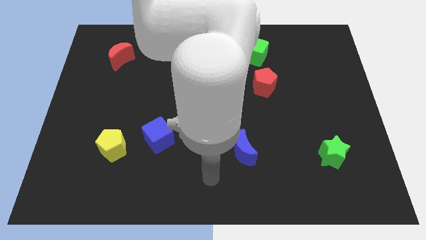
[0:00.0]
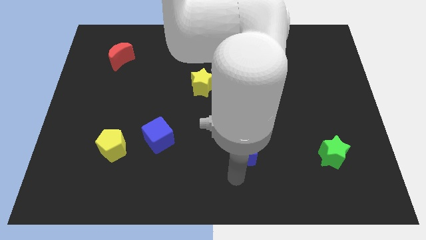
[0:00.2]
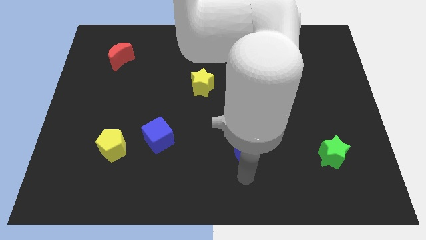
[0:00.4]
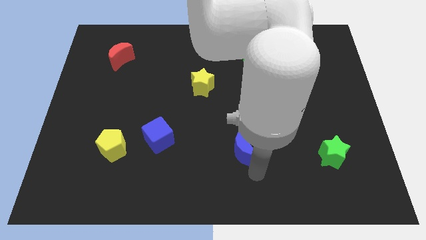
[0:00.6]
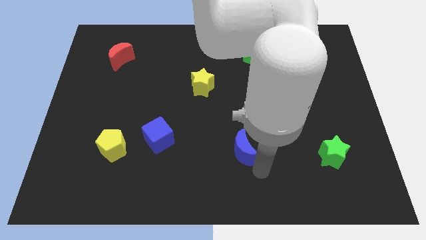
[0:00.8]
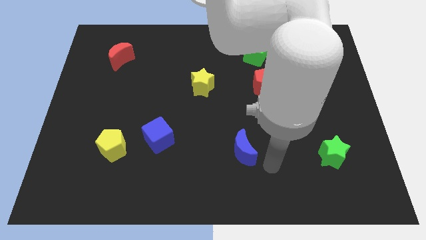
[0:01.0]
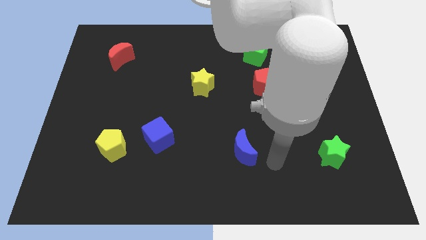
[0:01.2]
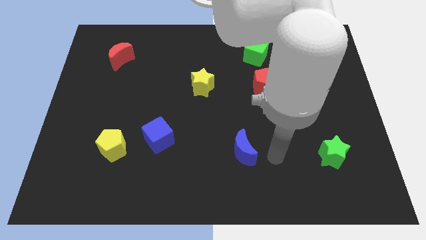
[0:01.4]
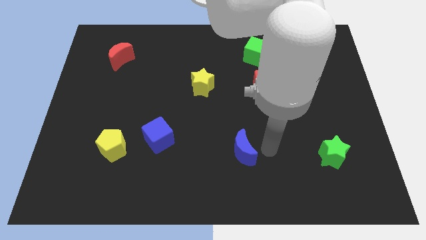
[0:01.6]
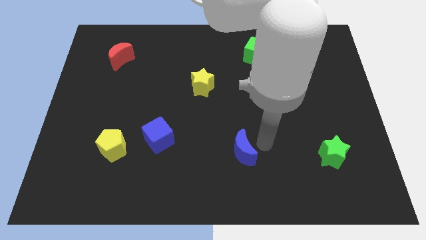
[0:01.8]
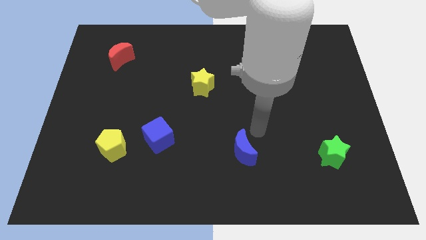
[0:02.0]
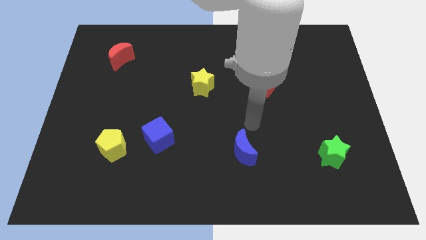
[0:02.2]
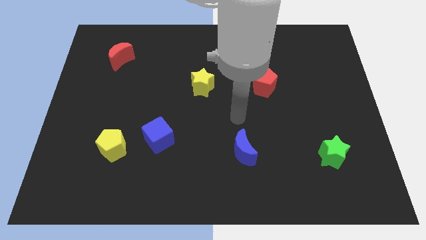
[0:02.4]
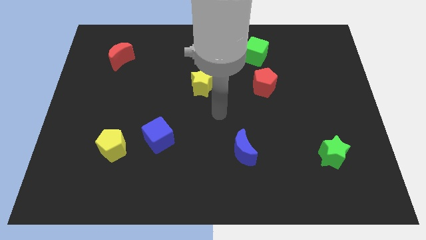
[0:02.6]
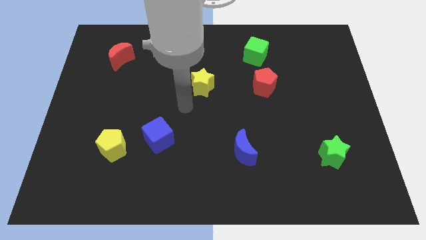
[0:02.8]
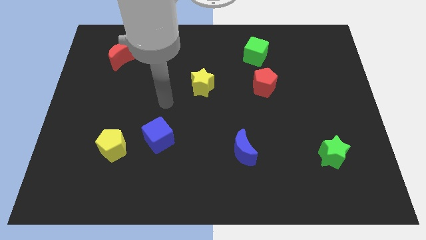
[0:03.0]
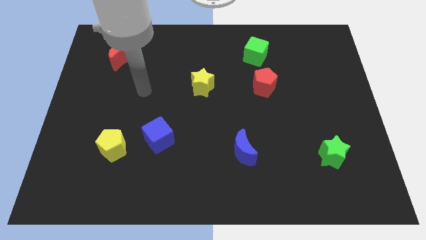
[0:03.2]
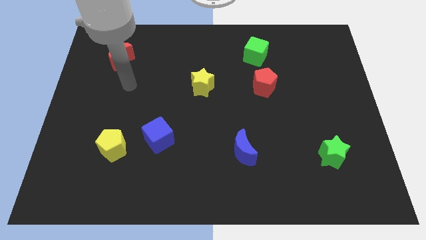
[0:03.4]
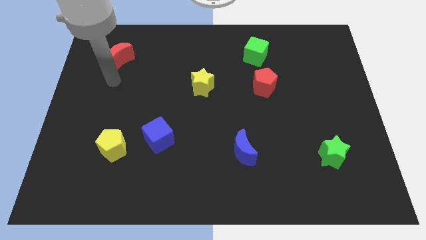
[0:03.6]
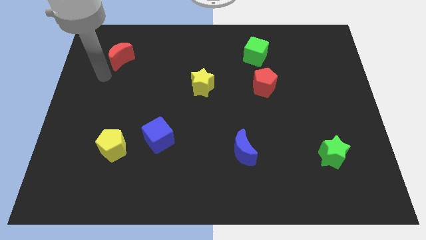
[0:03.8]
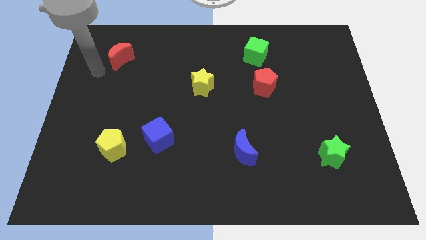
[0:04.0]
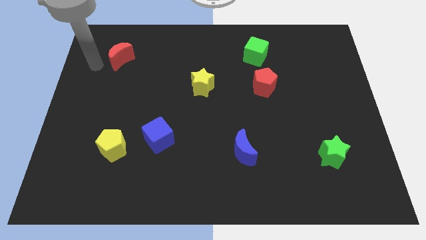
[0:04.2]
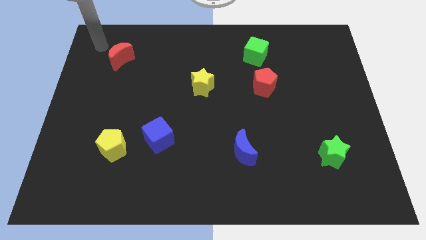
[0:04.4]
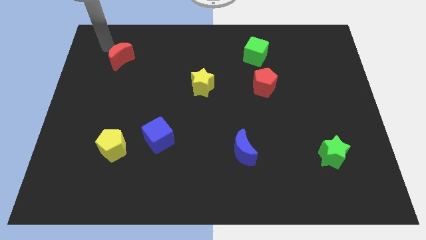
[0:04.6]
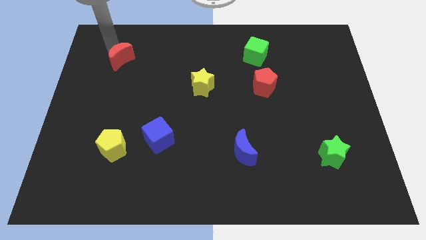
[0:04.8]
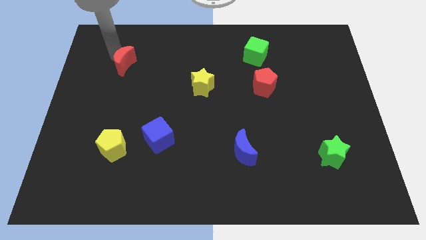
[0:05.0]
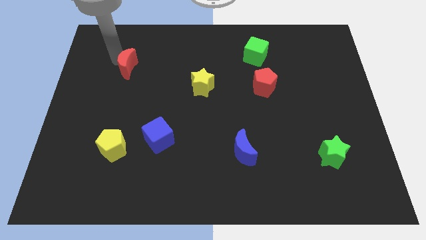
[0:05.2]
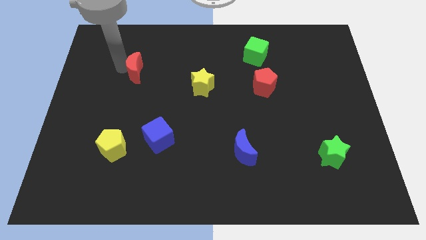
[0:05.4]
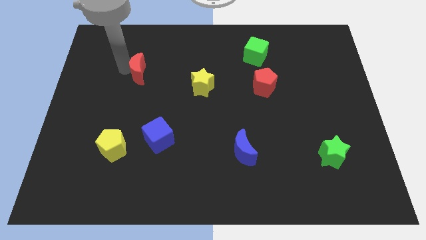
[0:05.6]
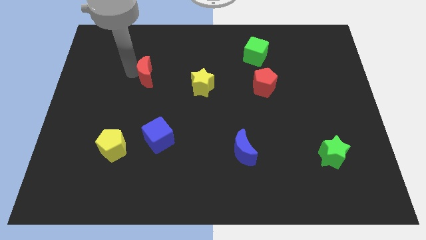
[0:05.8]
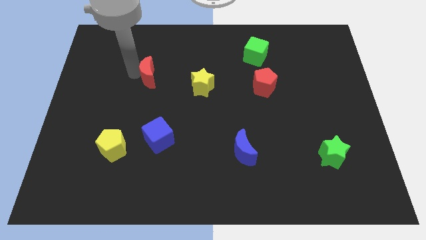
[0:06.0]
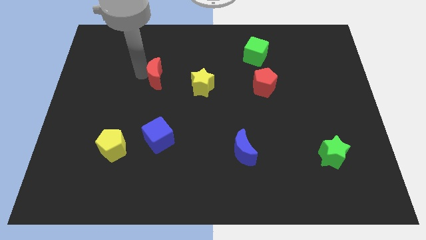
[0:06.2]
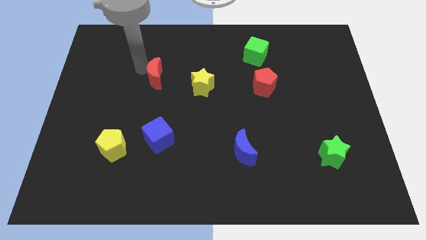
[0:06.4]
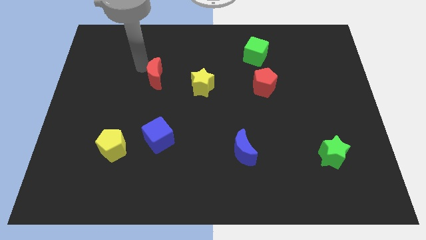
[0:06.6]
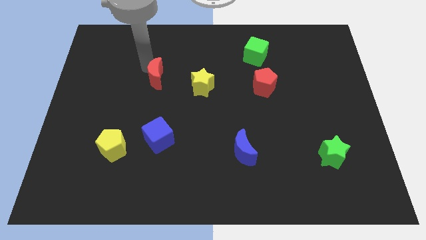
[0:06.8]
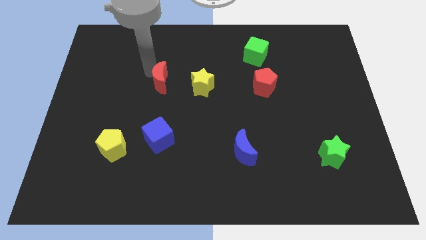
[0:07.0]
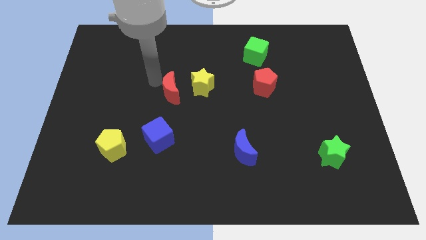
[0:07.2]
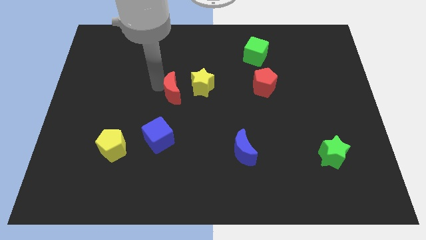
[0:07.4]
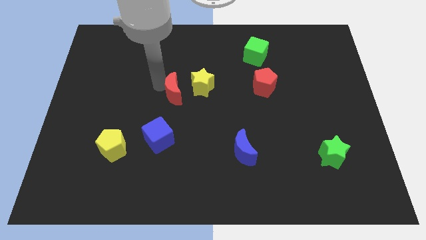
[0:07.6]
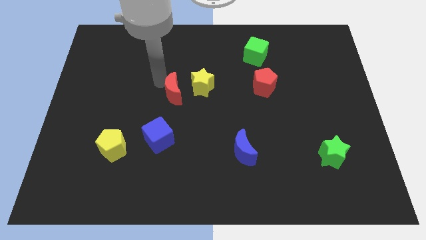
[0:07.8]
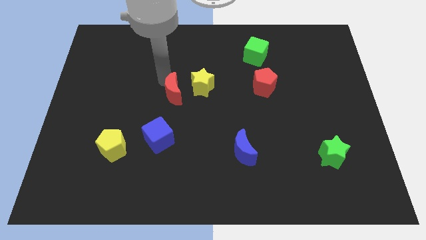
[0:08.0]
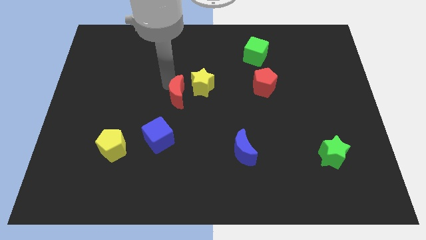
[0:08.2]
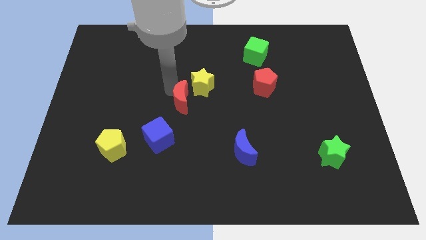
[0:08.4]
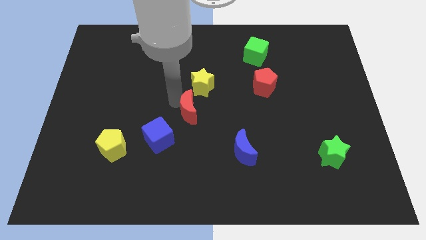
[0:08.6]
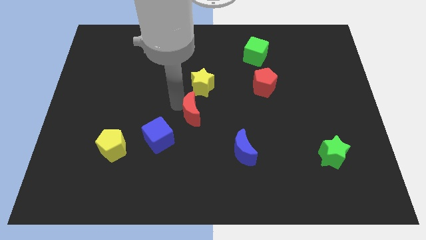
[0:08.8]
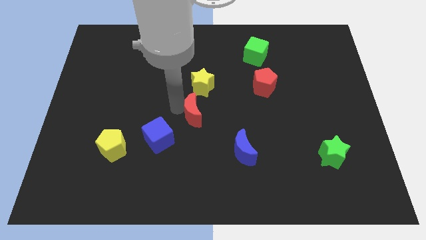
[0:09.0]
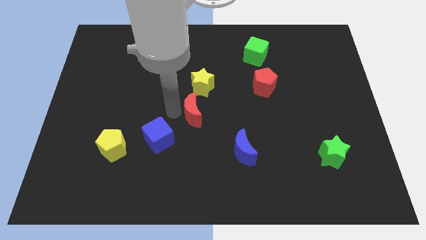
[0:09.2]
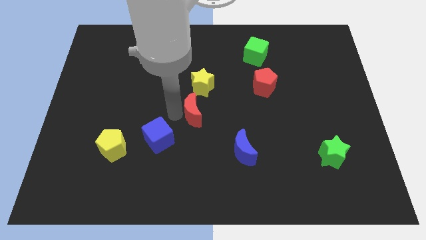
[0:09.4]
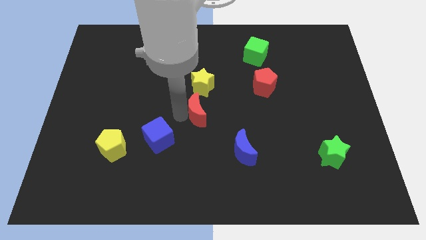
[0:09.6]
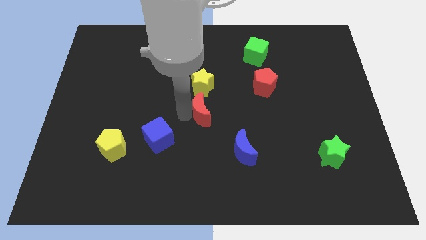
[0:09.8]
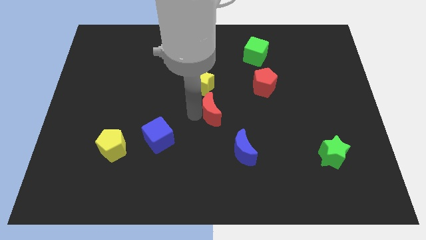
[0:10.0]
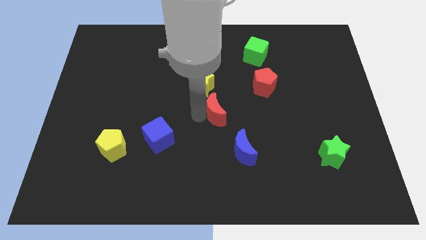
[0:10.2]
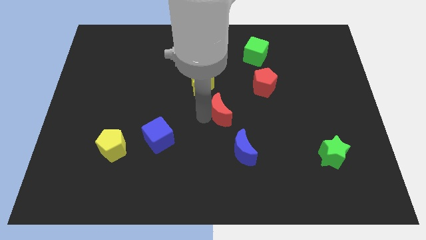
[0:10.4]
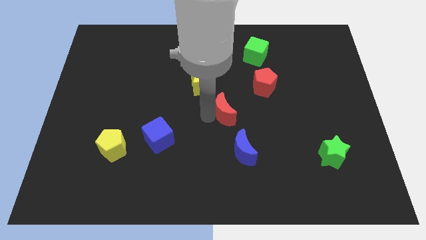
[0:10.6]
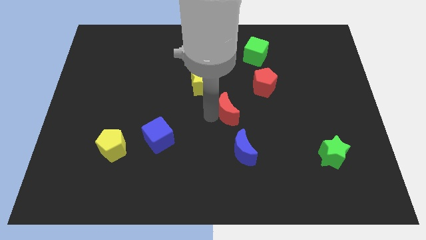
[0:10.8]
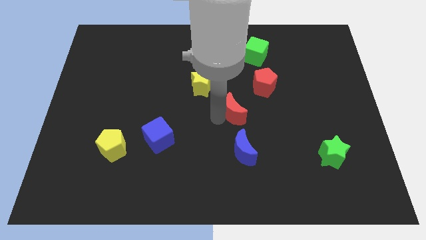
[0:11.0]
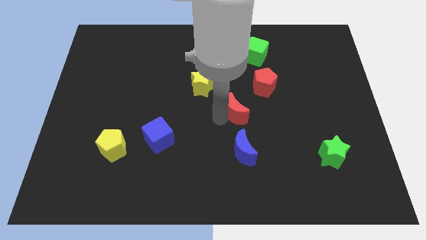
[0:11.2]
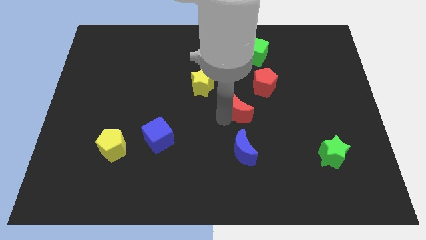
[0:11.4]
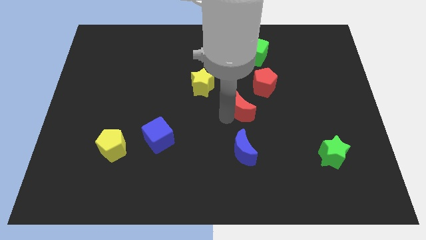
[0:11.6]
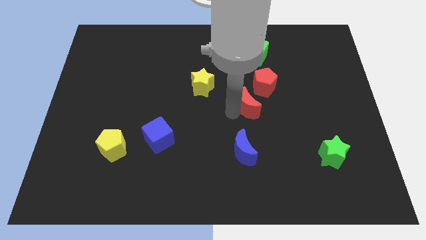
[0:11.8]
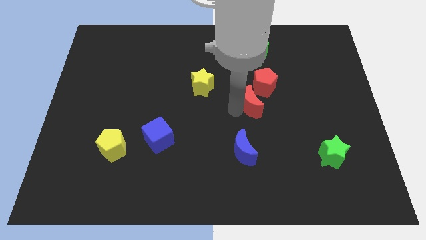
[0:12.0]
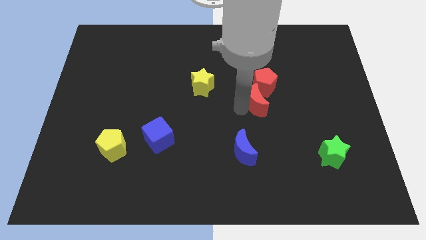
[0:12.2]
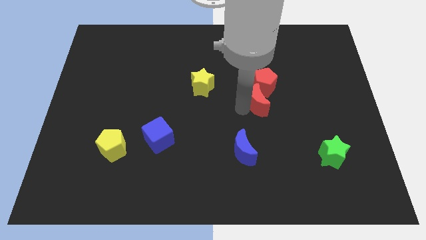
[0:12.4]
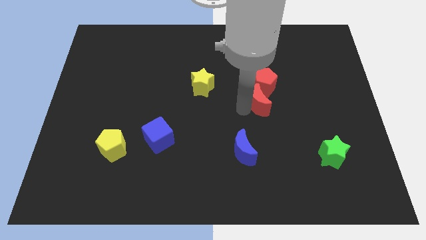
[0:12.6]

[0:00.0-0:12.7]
move the red moon towards the red pentagon

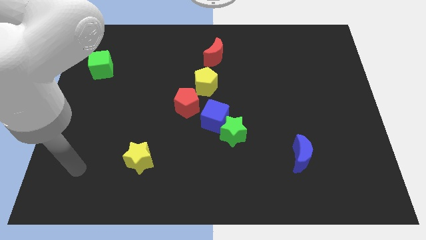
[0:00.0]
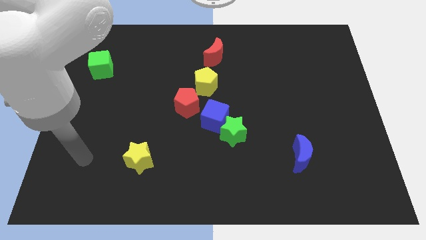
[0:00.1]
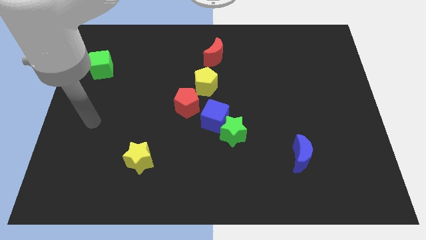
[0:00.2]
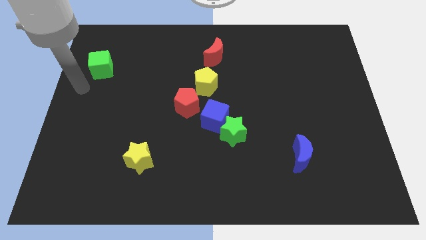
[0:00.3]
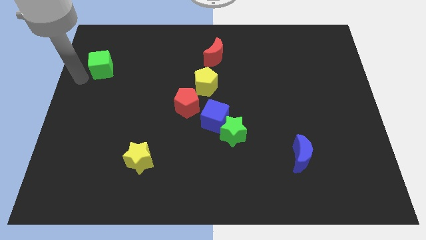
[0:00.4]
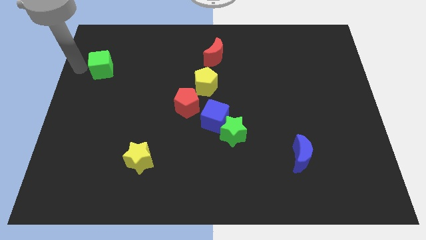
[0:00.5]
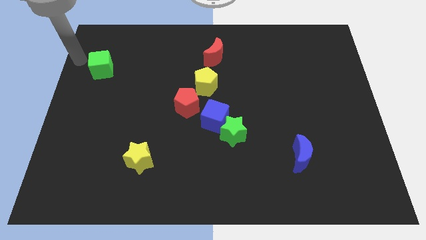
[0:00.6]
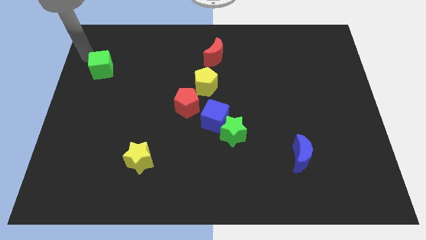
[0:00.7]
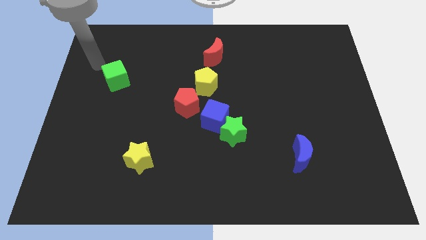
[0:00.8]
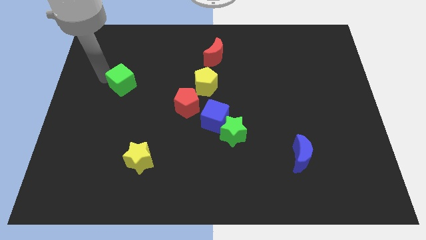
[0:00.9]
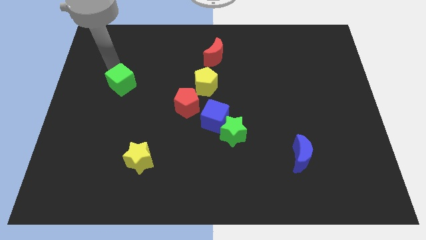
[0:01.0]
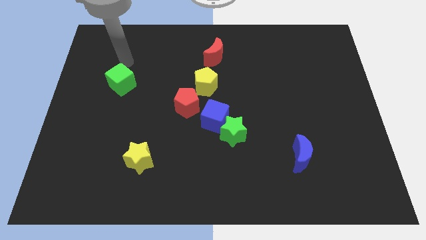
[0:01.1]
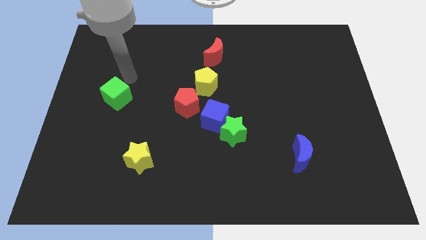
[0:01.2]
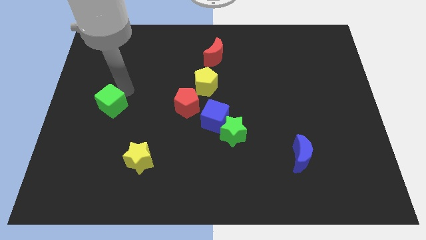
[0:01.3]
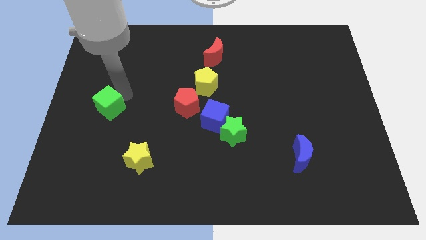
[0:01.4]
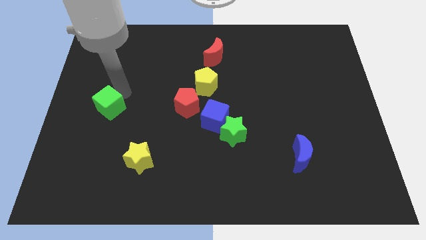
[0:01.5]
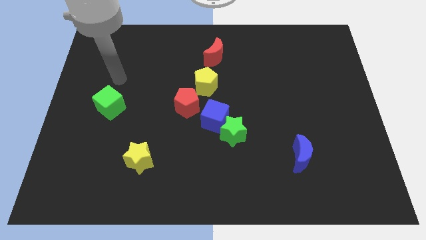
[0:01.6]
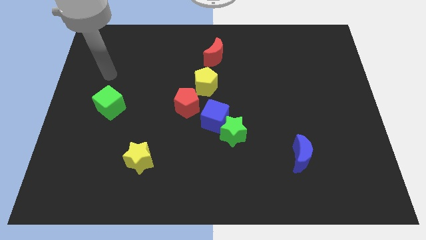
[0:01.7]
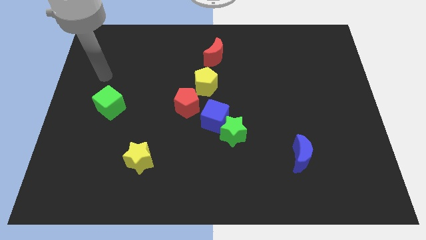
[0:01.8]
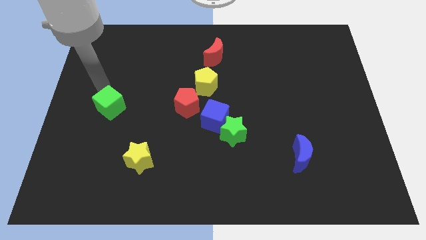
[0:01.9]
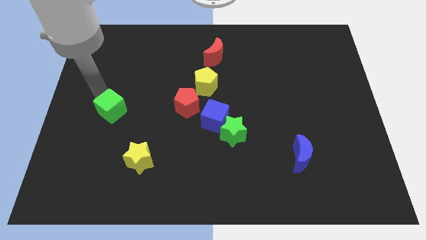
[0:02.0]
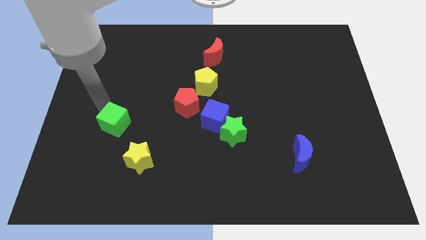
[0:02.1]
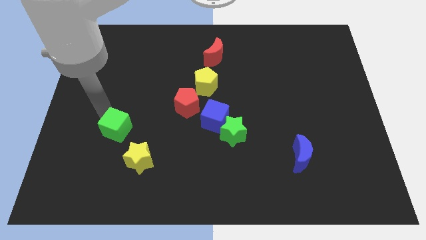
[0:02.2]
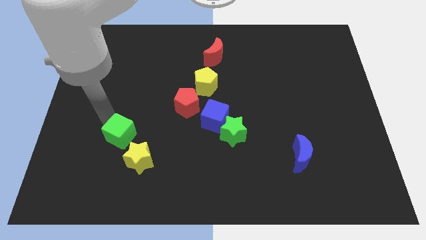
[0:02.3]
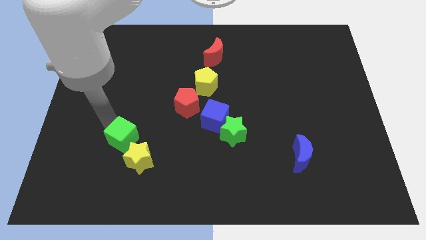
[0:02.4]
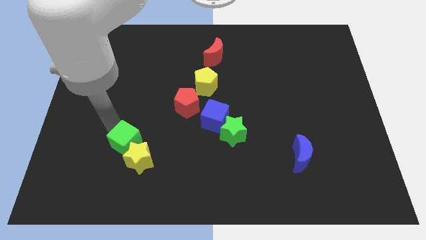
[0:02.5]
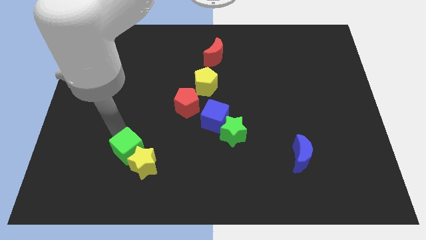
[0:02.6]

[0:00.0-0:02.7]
move the green cube close to the yellow star
